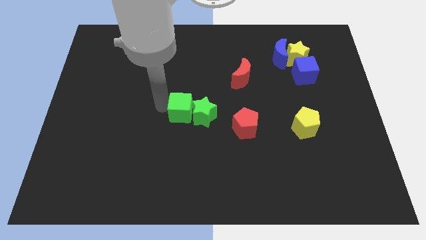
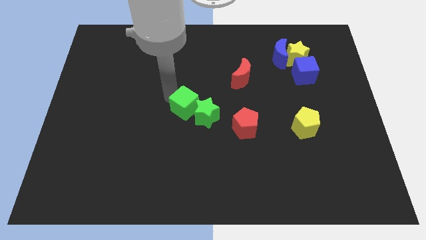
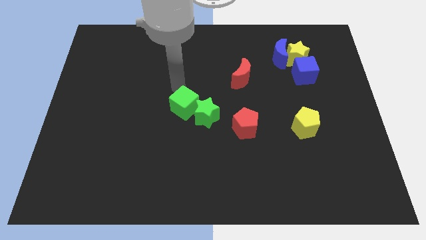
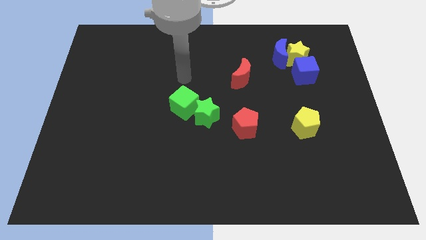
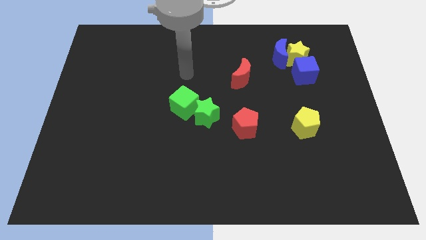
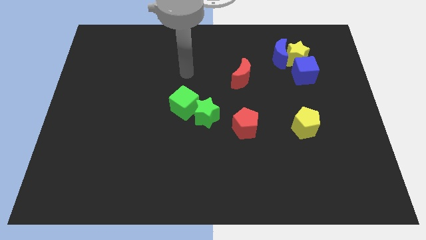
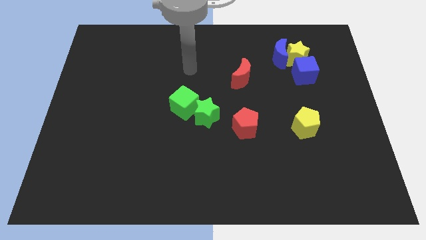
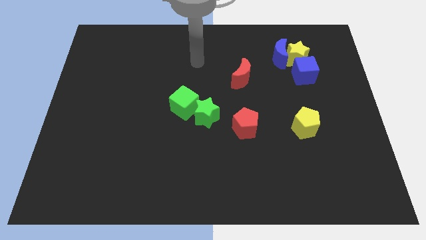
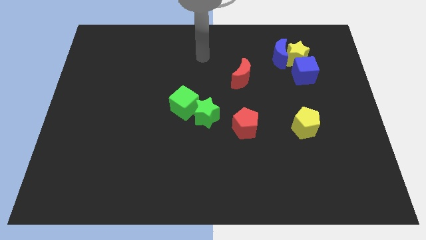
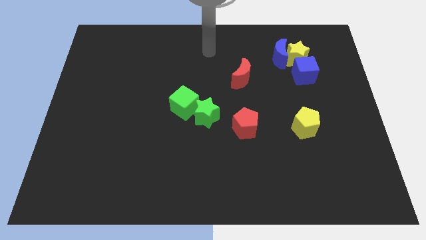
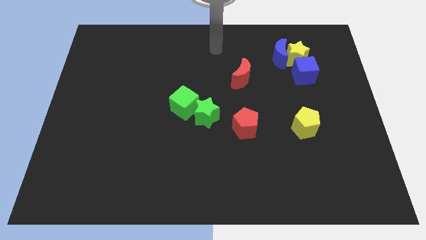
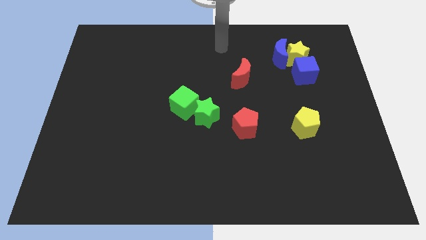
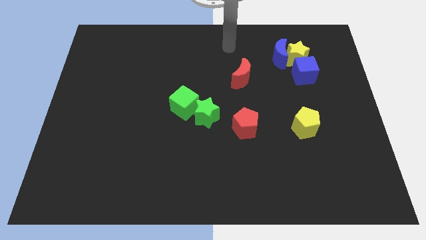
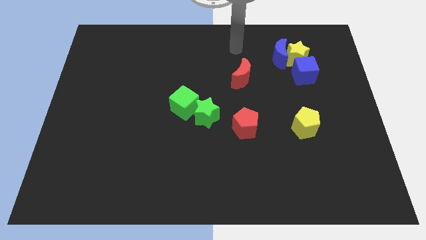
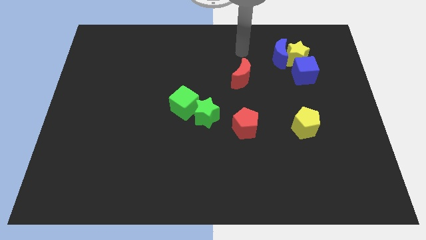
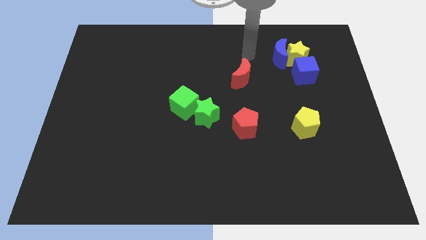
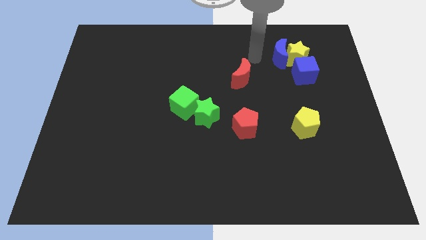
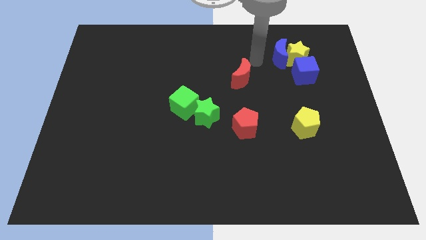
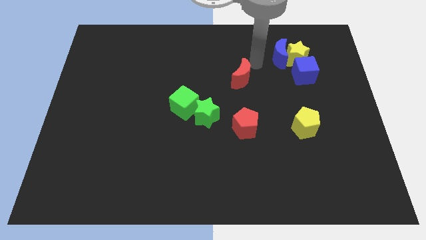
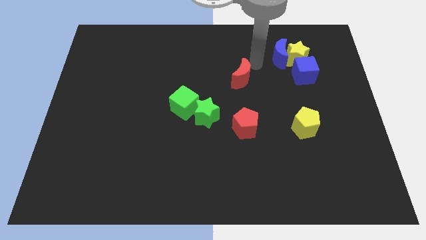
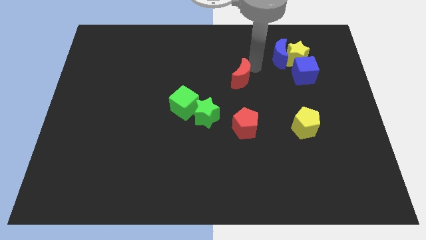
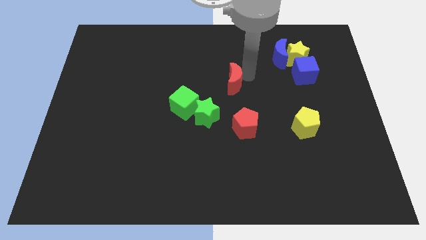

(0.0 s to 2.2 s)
place your arm between red moon and blue moon

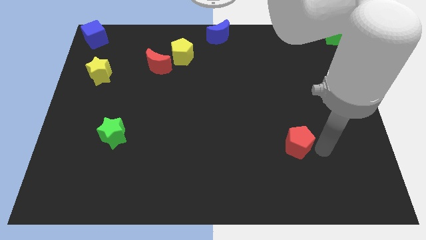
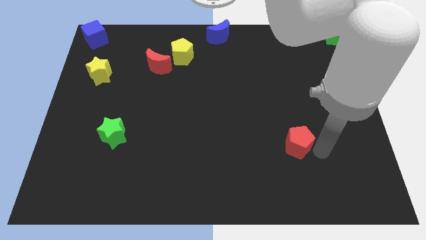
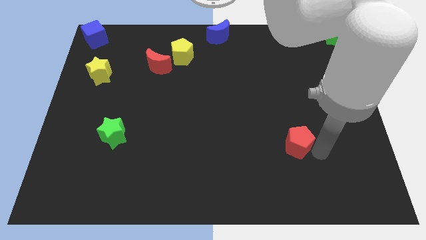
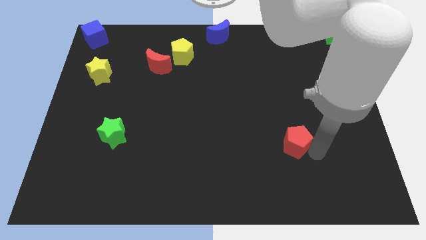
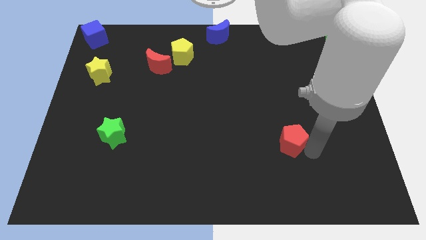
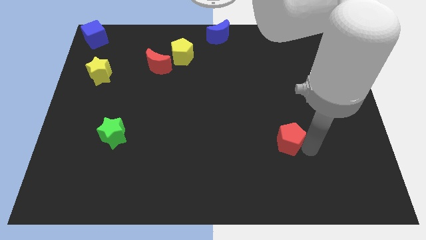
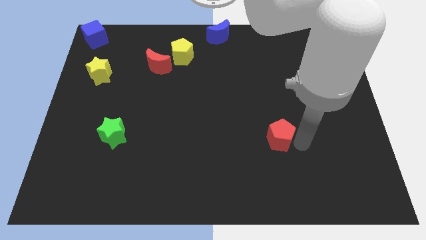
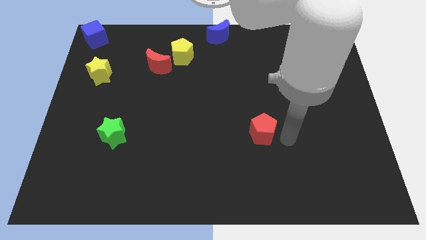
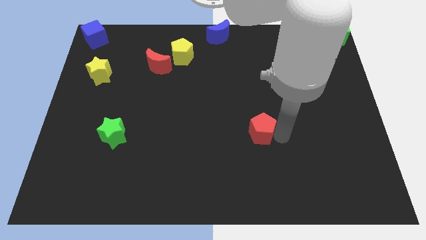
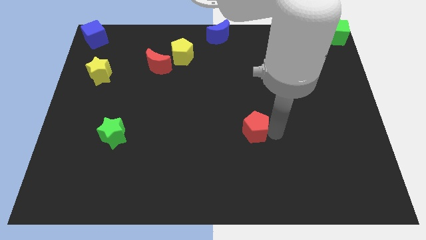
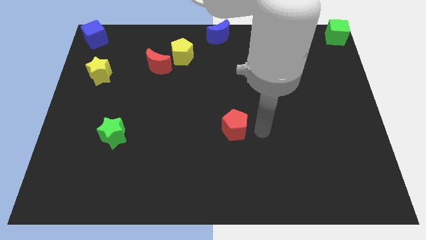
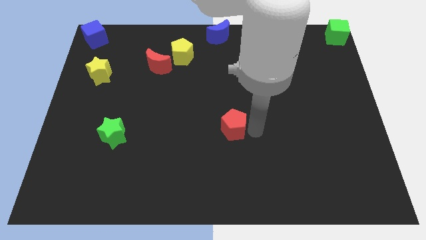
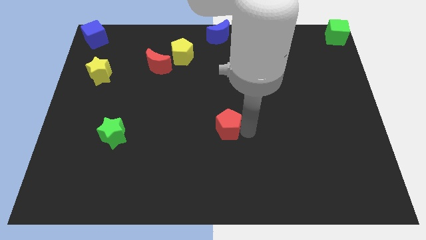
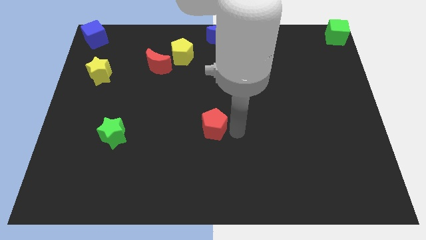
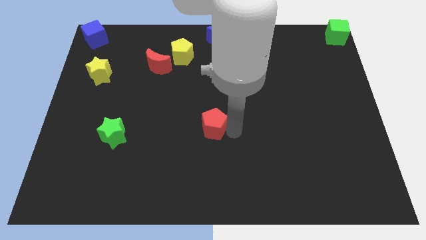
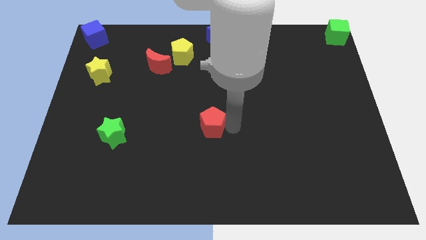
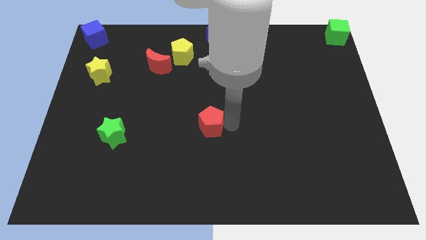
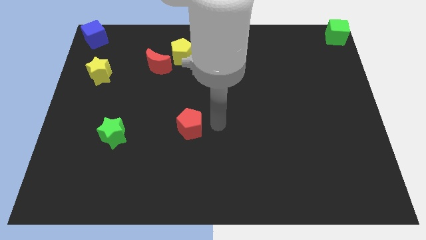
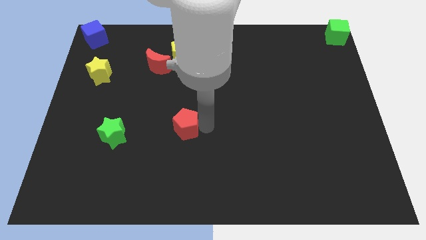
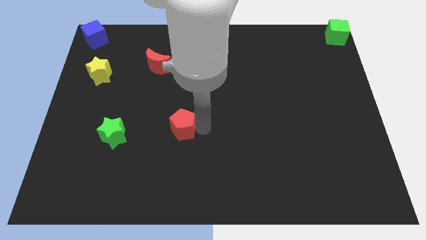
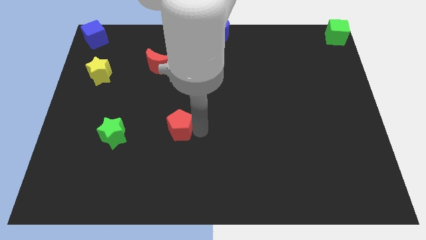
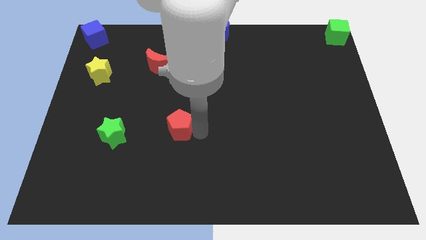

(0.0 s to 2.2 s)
push the red pentagon slightly to the left of the board

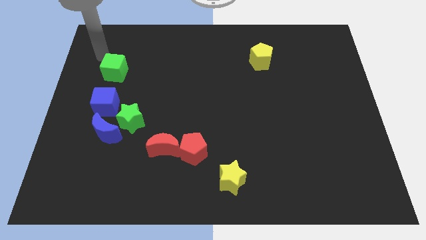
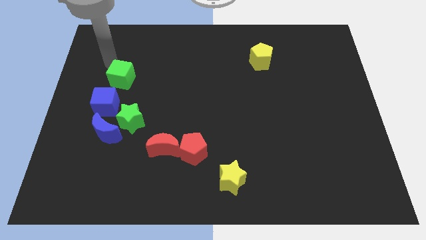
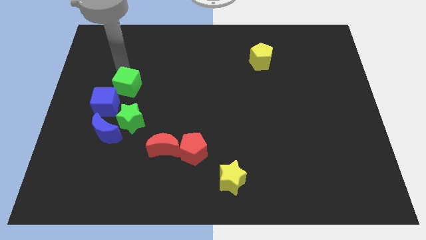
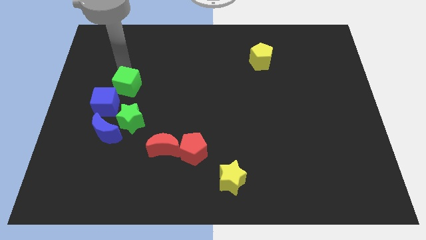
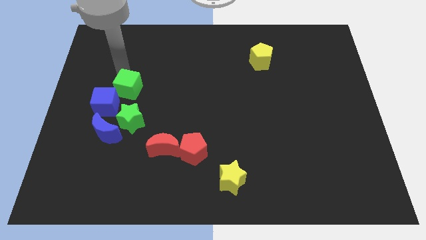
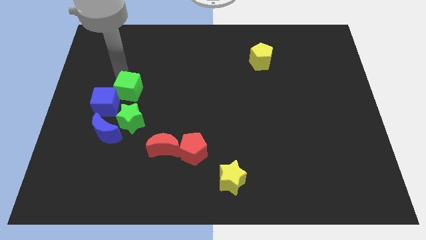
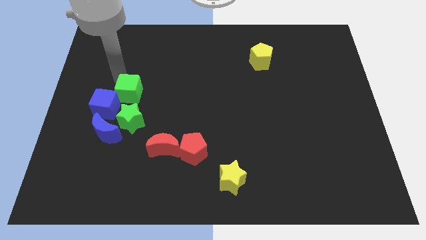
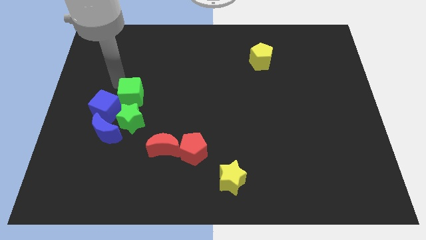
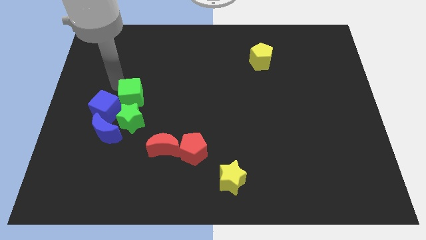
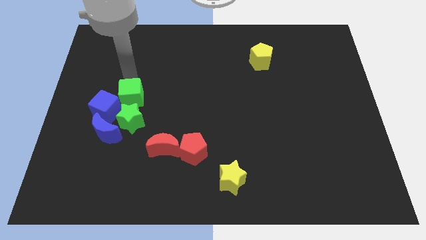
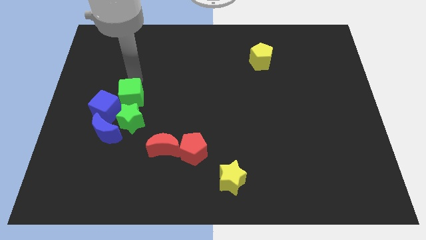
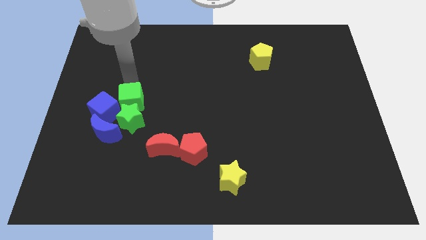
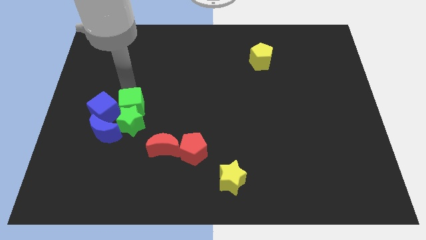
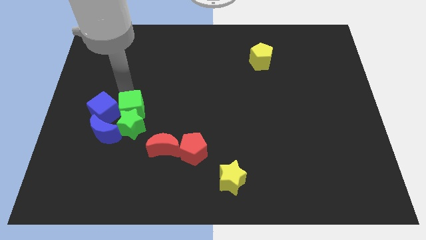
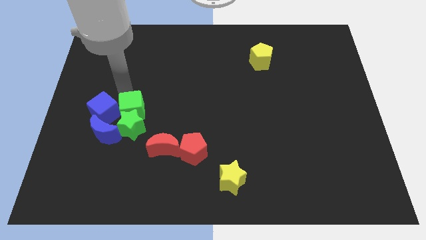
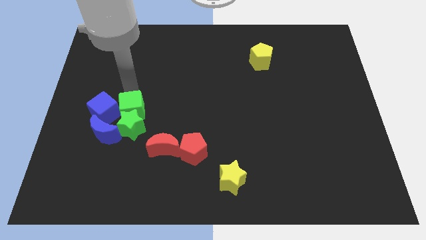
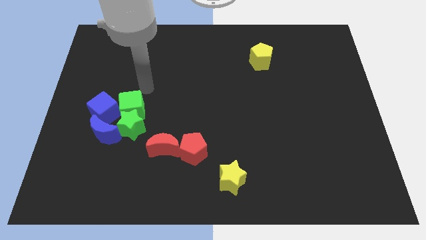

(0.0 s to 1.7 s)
push the green cube above green star

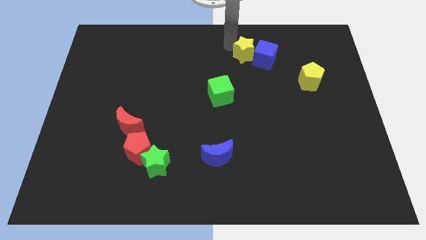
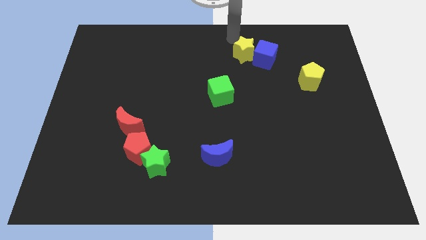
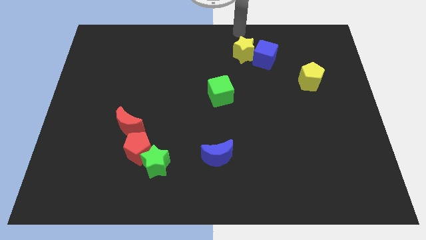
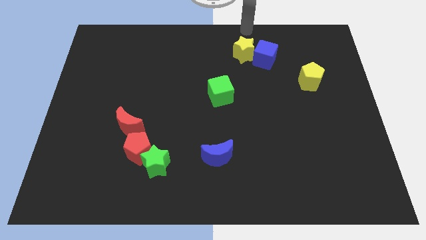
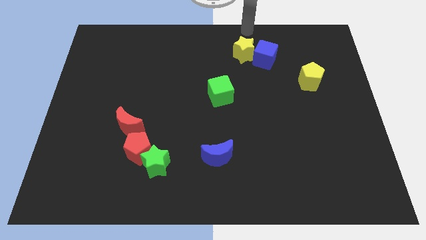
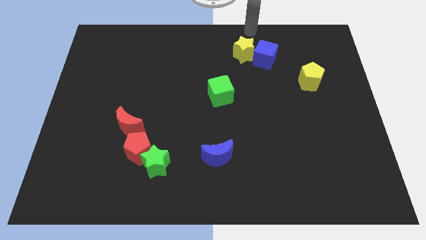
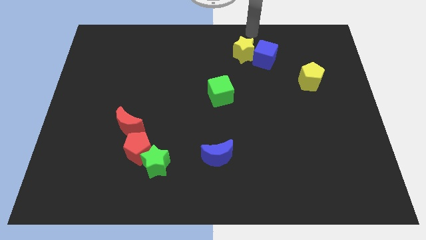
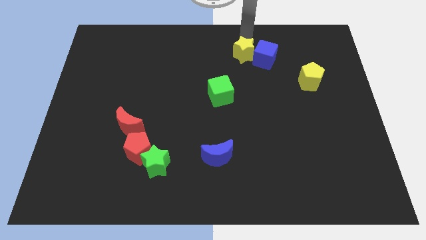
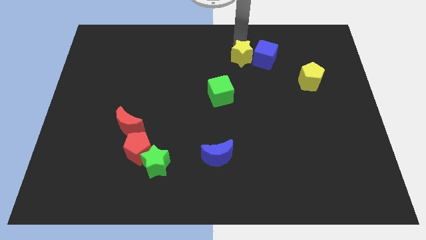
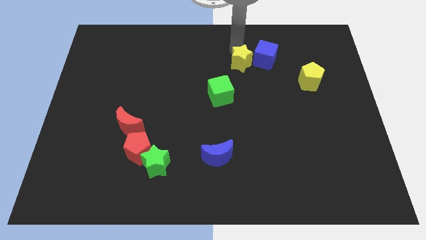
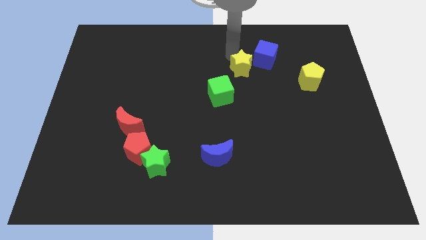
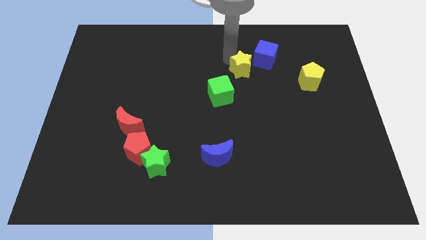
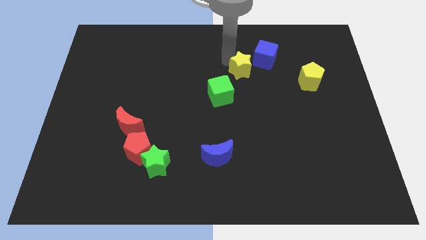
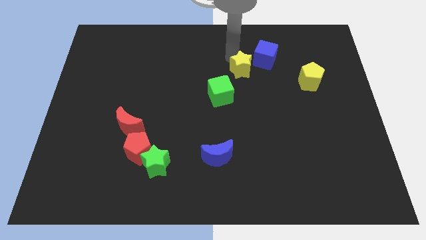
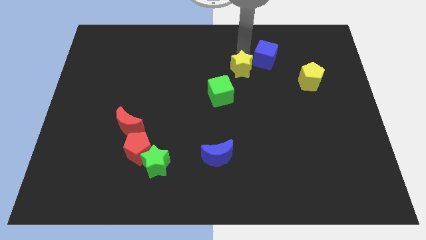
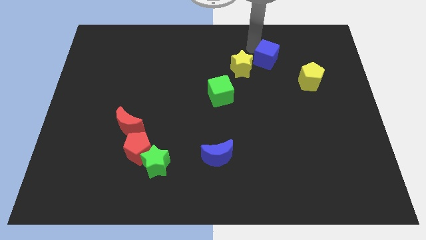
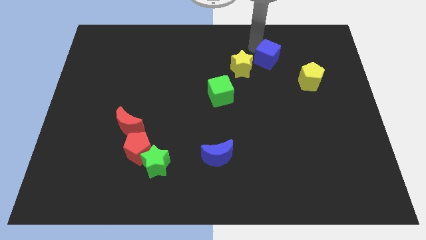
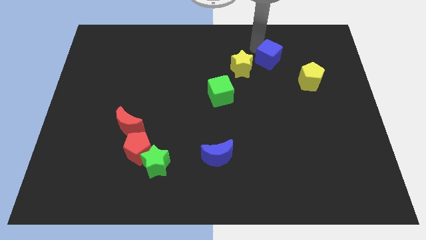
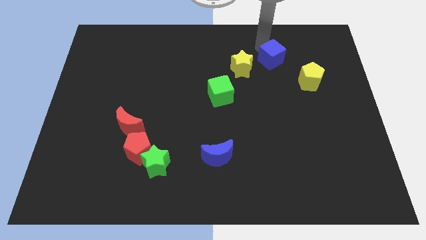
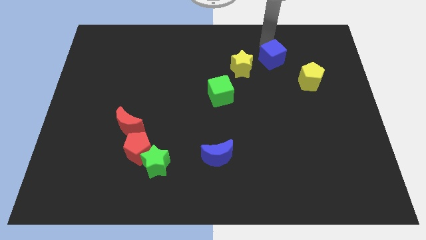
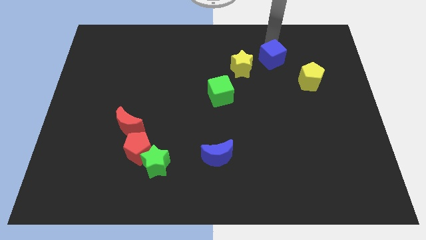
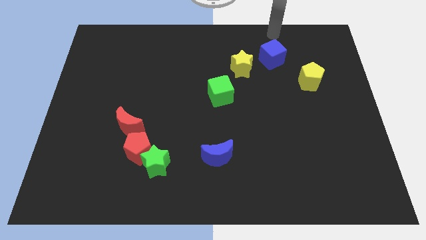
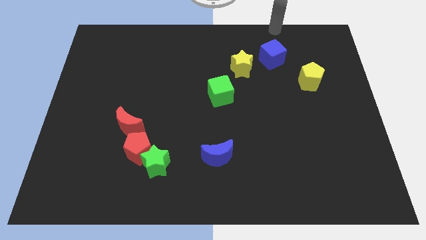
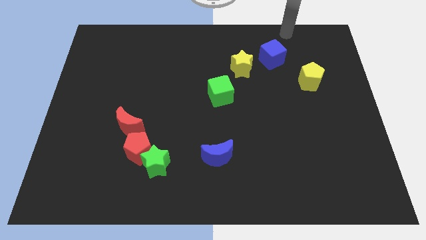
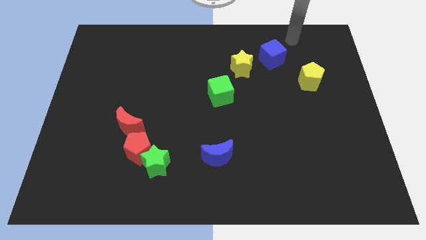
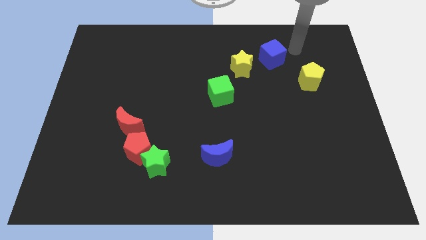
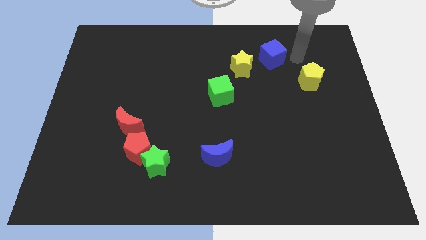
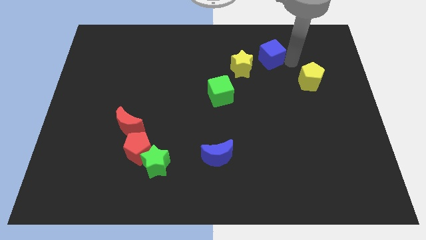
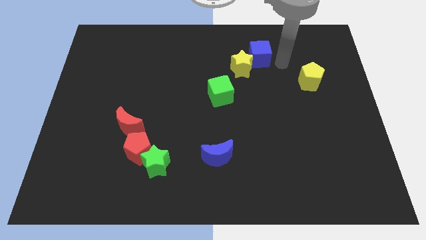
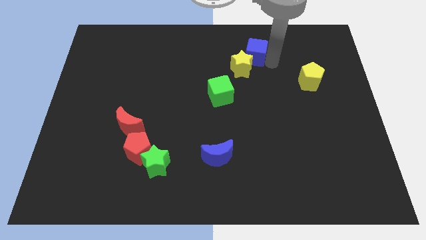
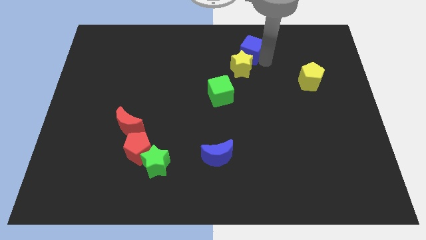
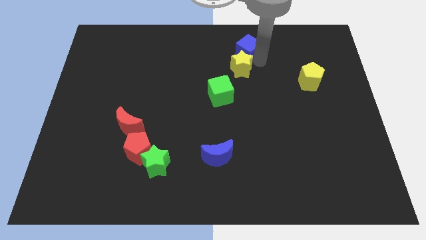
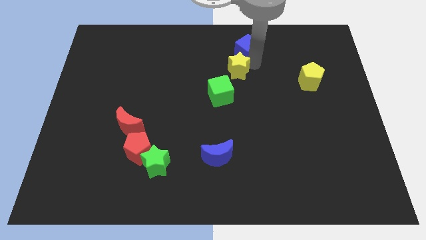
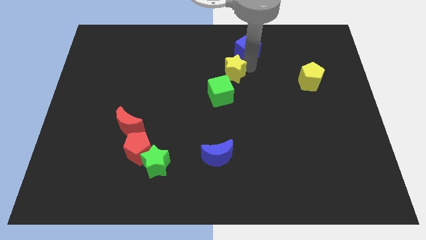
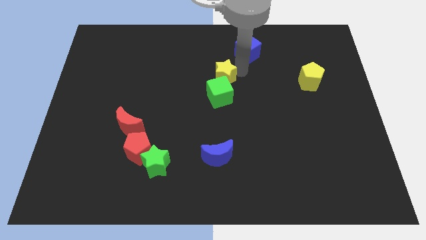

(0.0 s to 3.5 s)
adjust the yellow star and blue cube diagonally above the green cube
